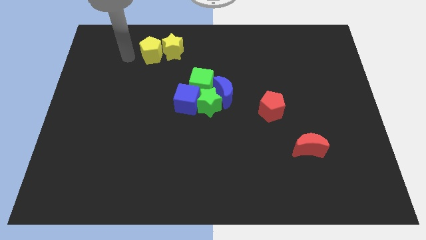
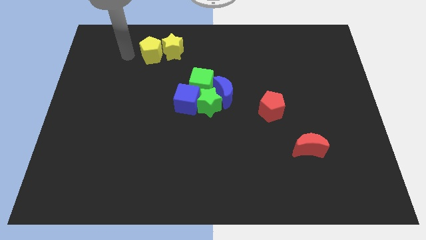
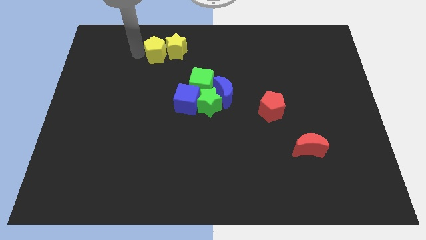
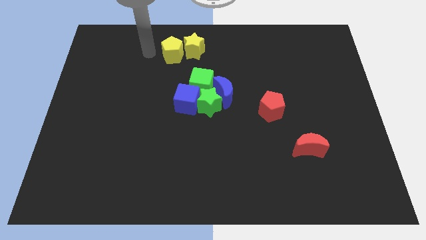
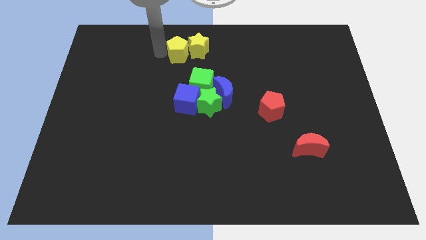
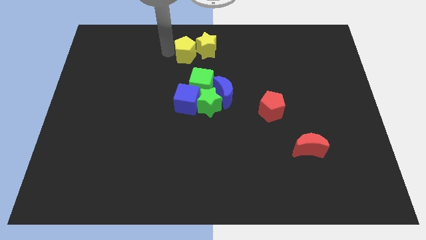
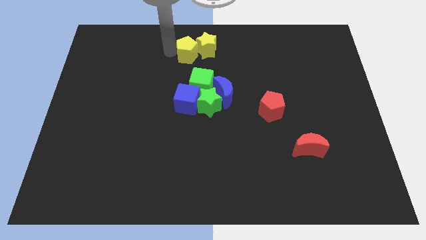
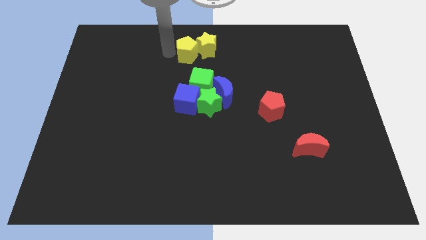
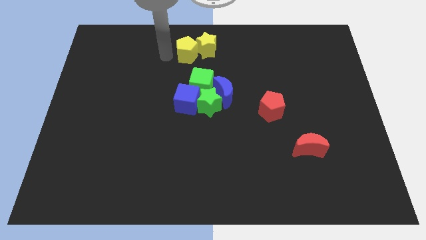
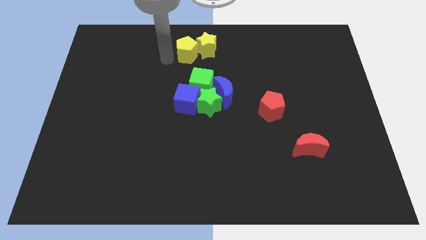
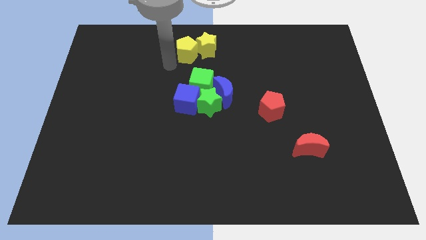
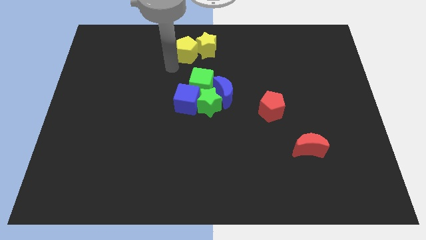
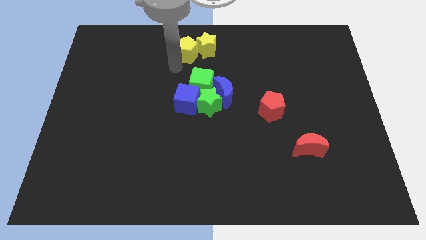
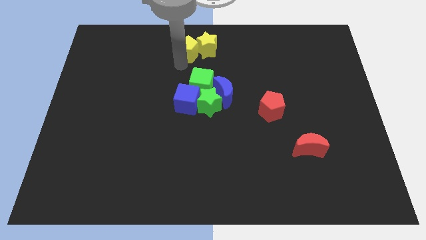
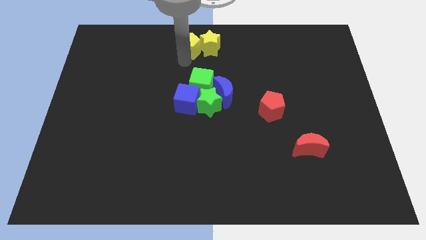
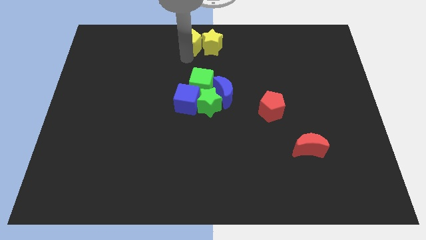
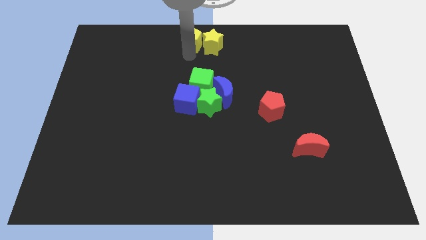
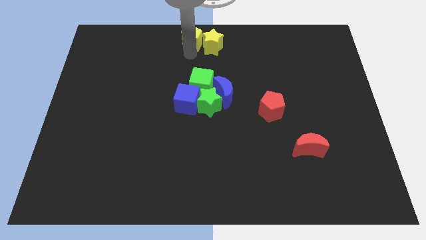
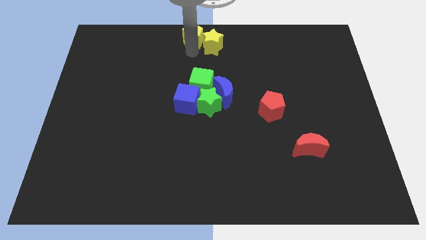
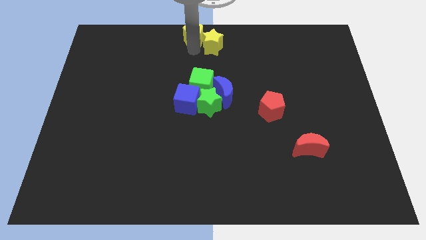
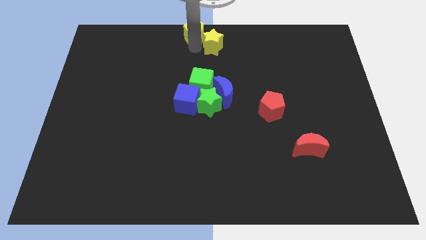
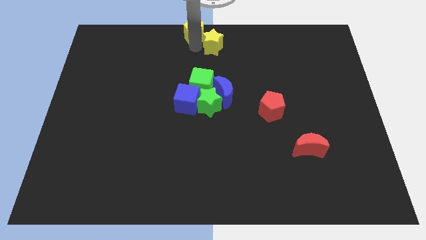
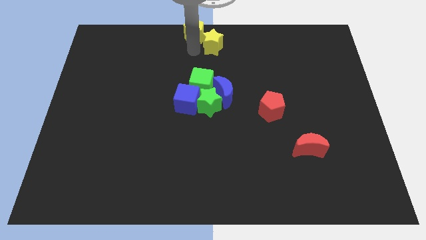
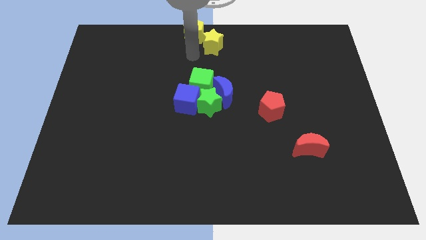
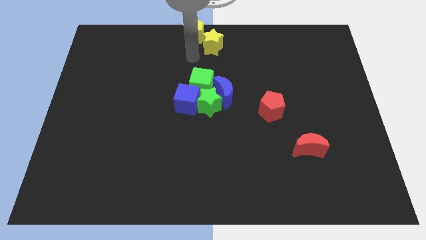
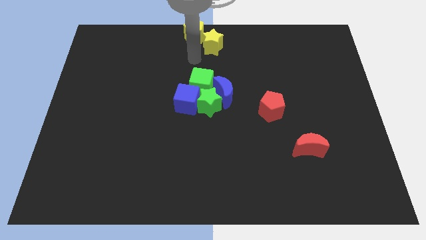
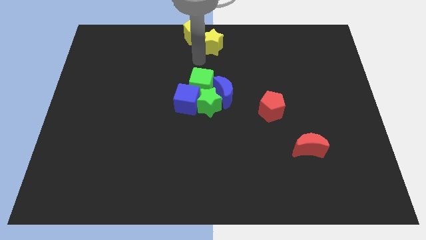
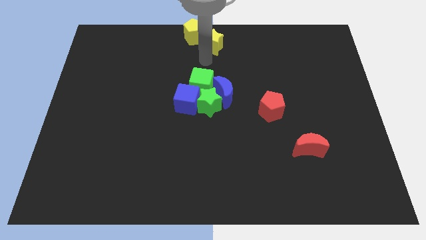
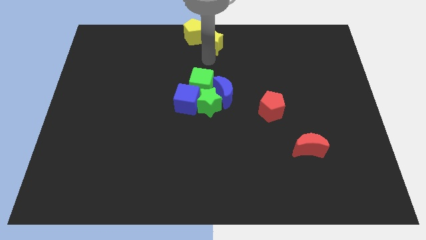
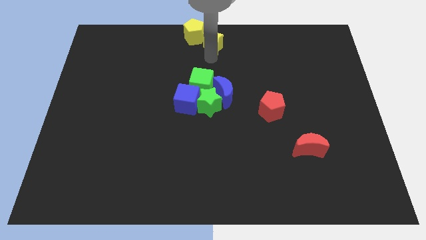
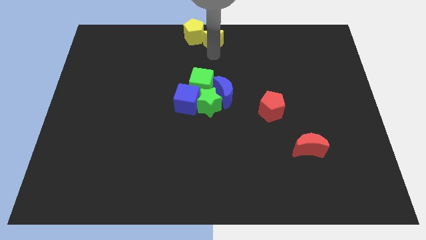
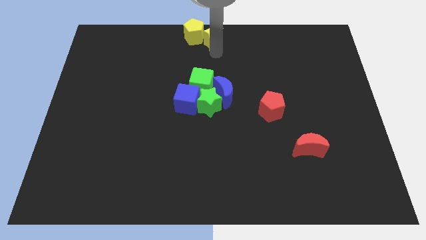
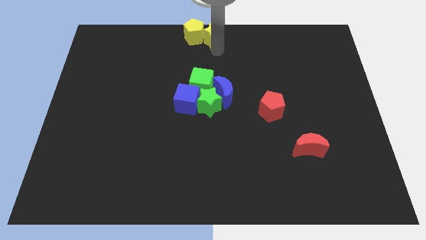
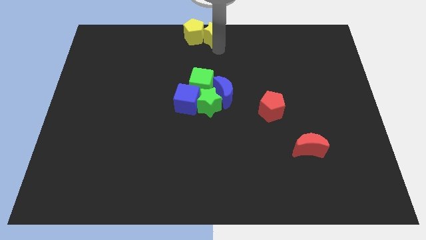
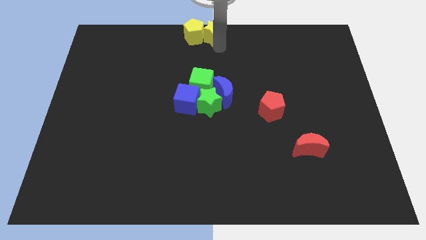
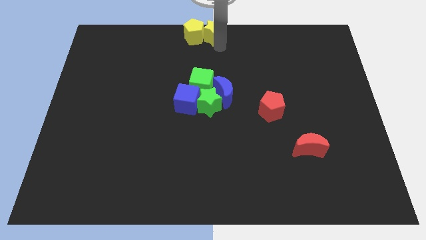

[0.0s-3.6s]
move yellow pentagon and yellow star to the top center of the board

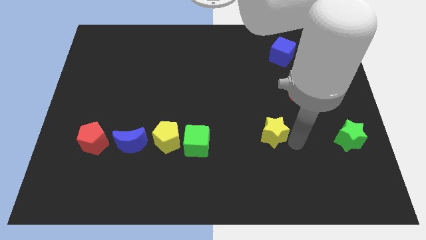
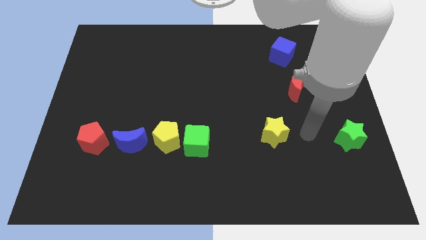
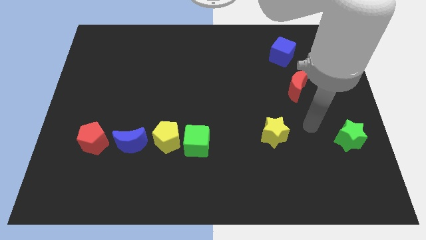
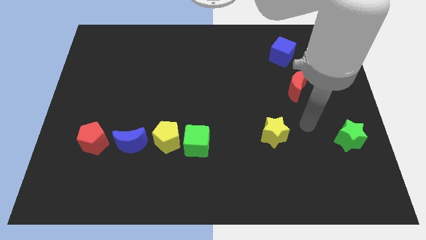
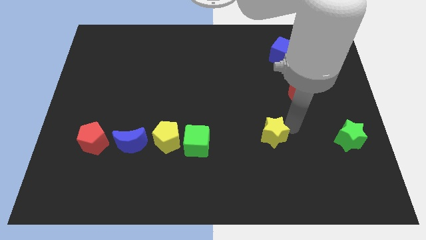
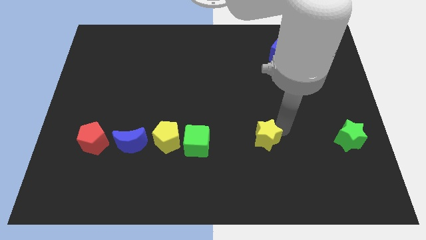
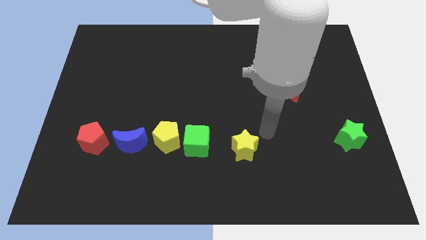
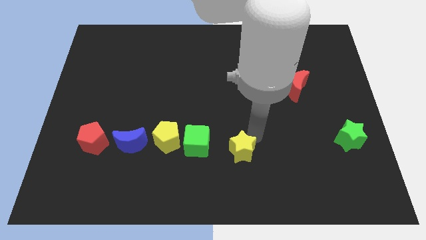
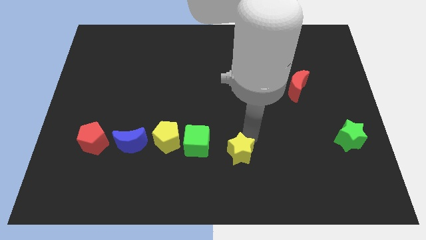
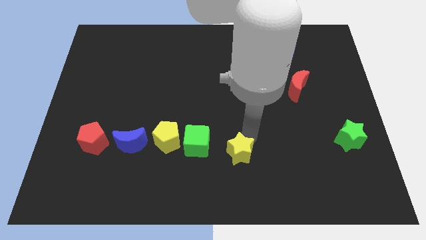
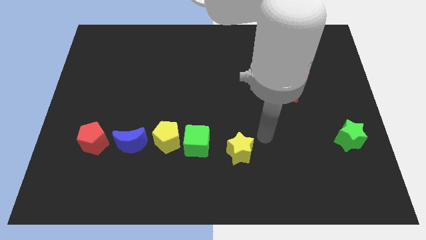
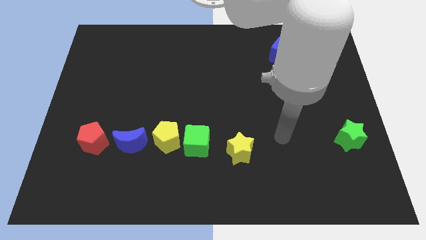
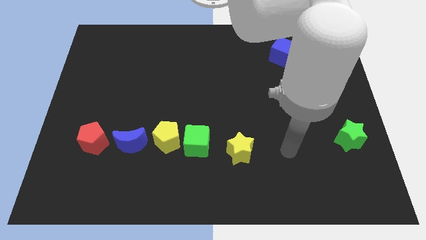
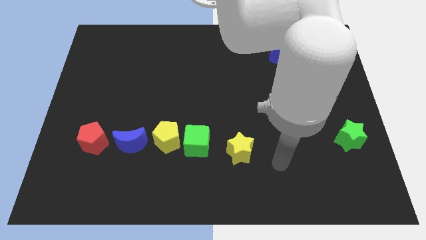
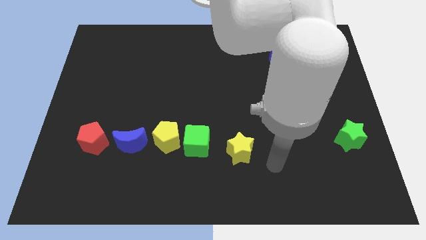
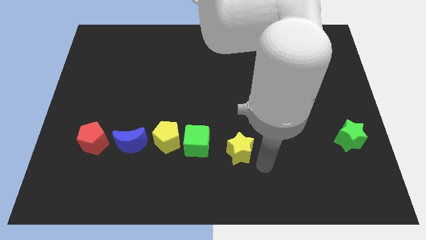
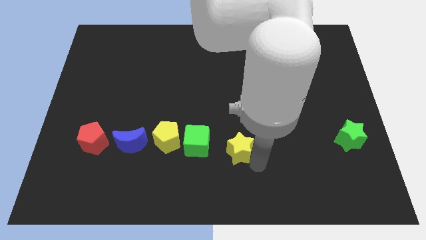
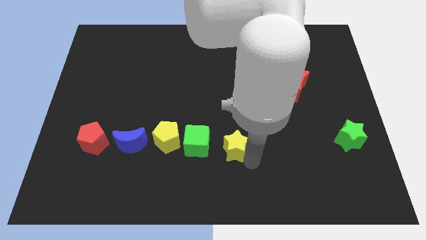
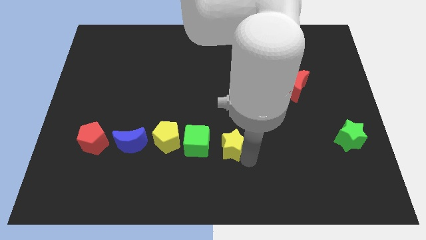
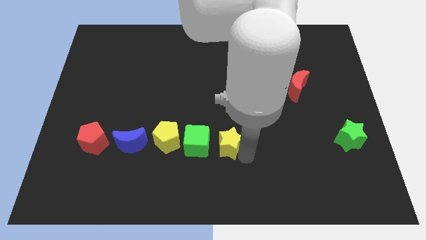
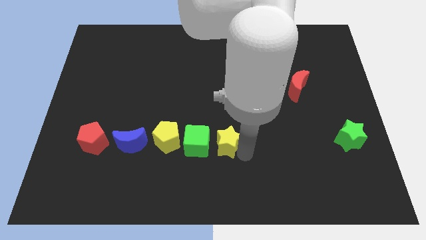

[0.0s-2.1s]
slide the yellow star slightly towards the green cube

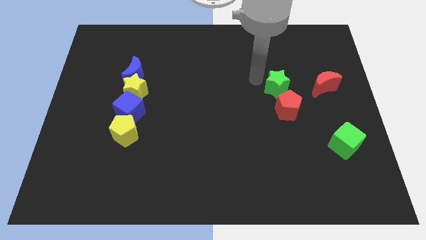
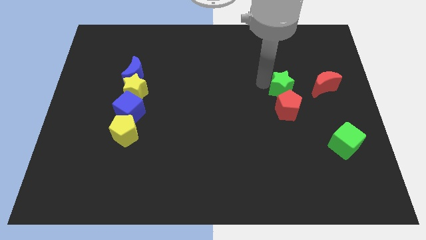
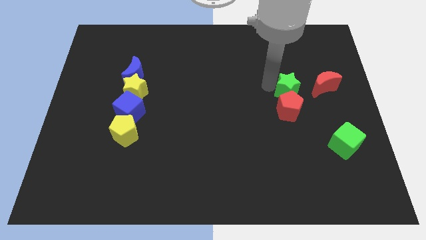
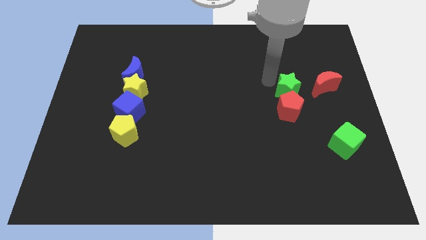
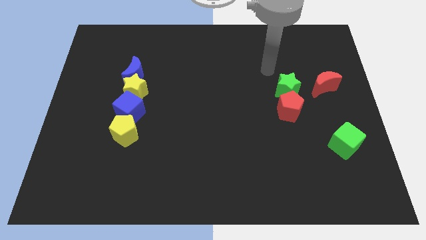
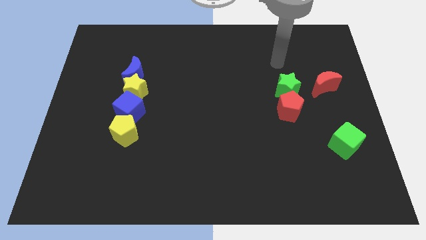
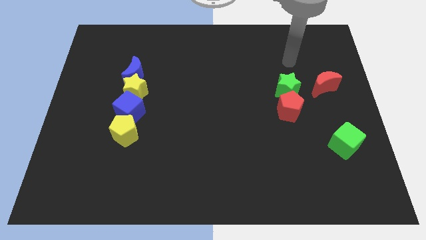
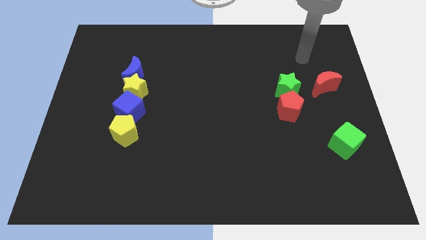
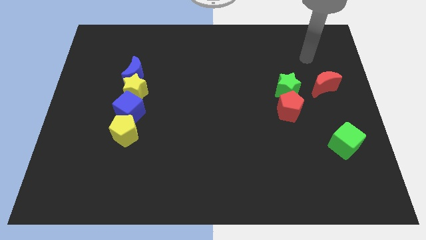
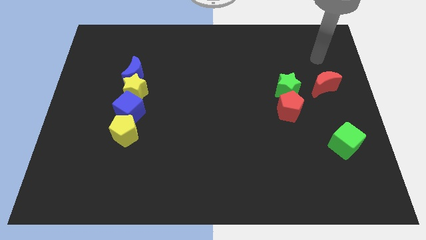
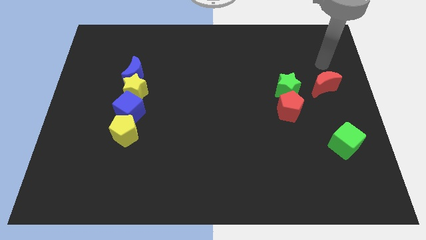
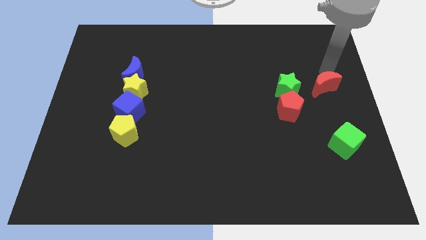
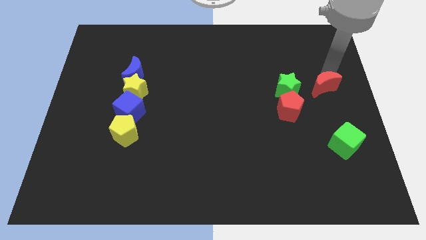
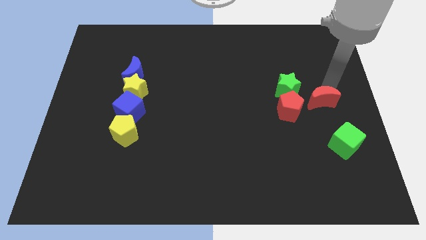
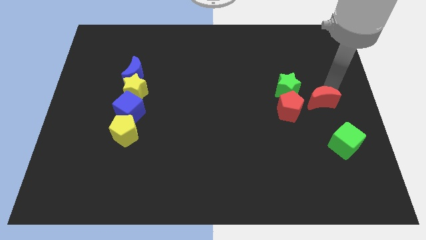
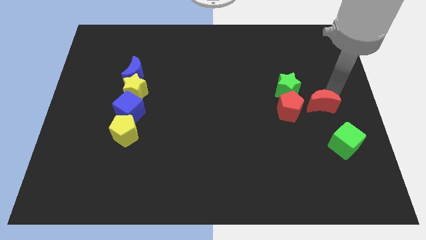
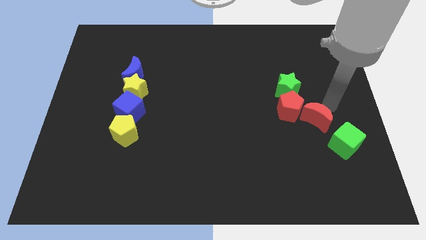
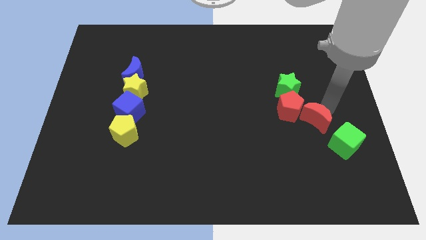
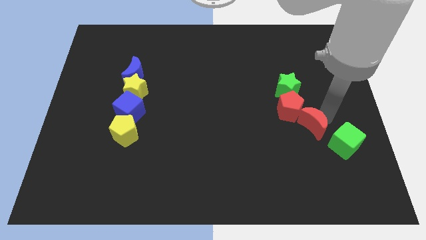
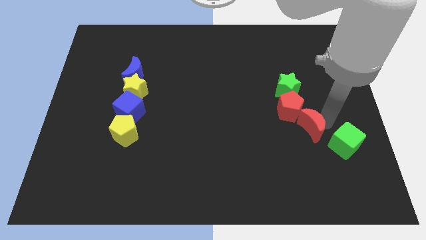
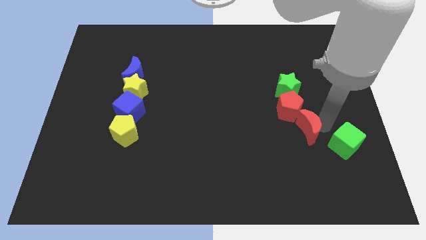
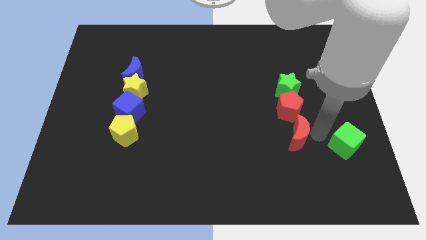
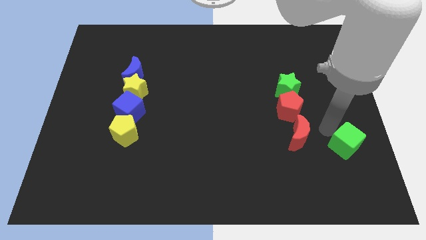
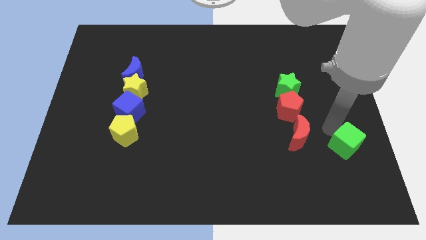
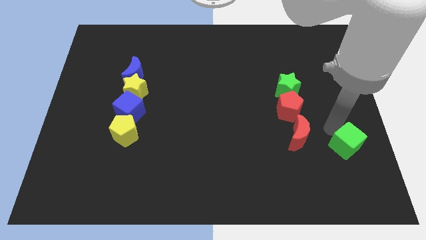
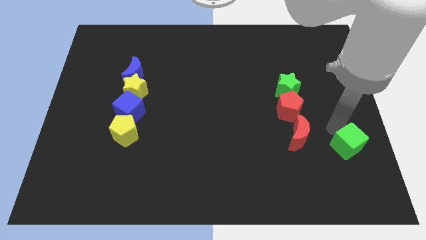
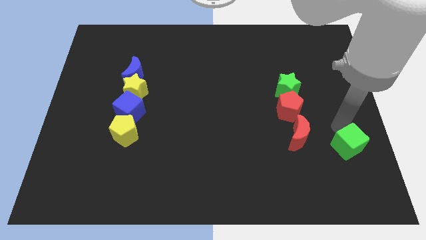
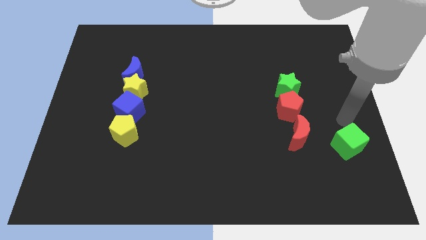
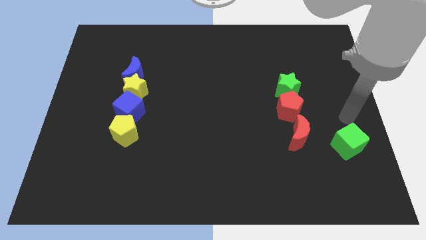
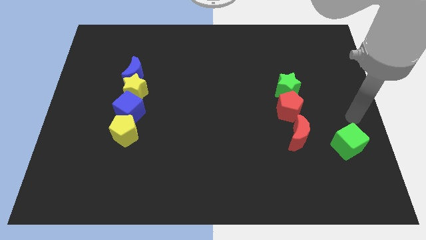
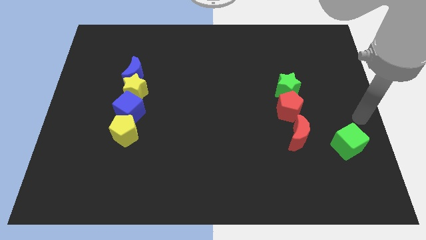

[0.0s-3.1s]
push the red moon to the bottom right side of the red pentagon

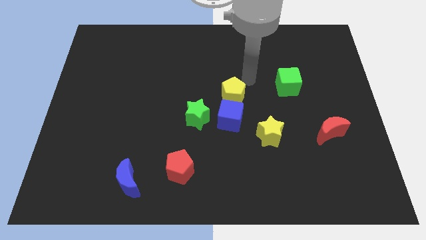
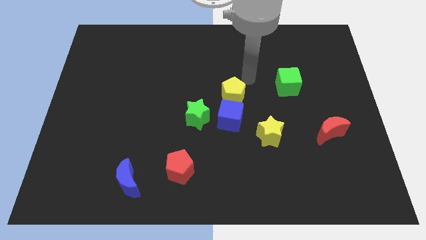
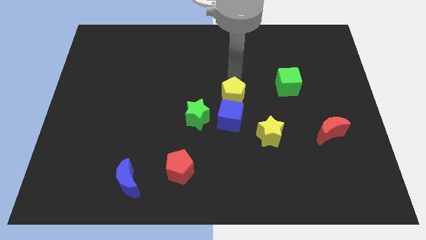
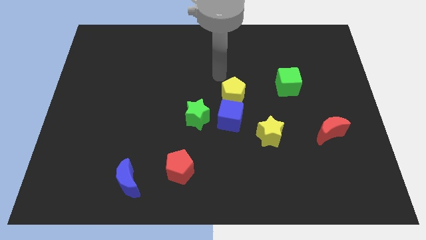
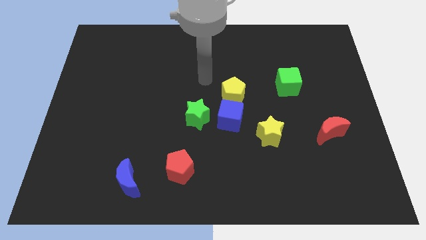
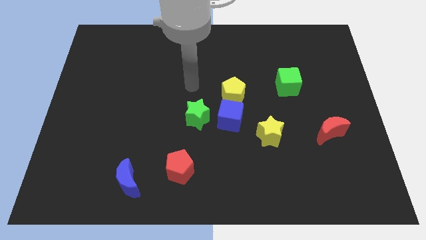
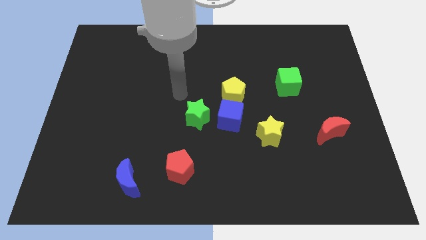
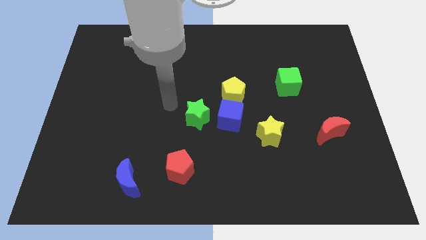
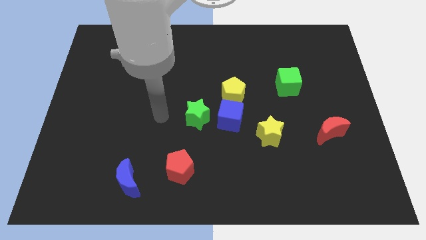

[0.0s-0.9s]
point your hand at the left side of the green star
